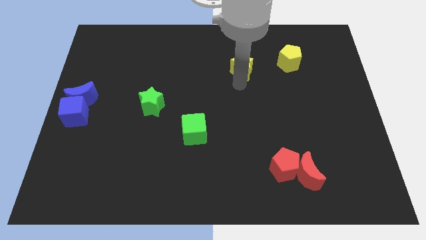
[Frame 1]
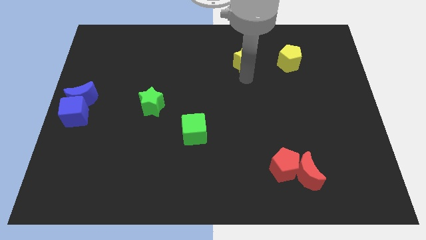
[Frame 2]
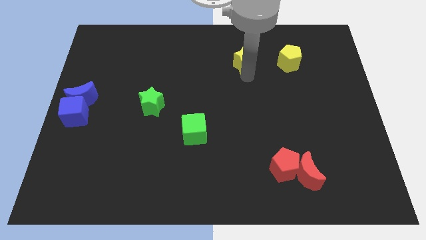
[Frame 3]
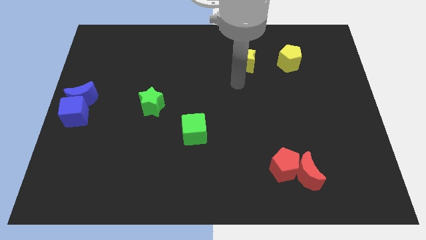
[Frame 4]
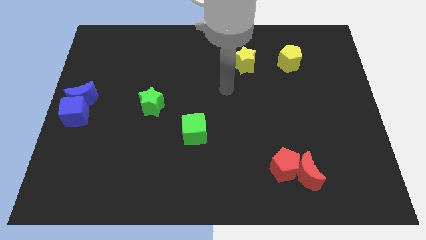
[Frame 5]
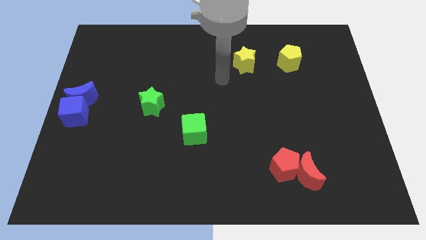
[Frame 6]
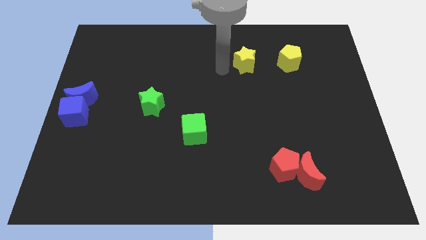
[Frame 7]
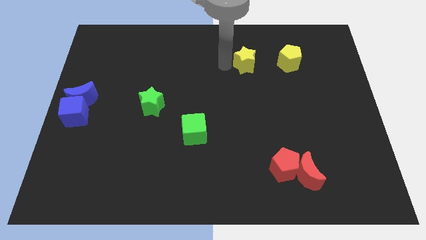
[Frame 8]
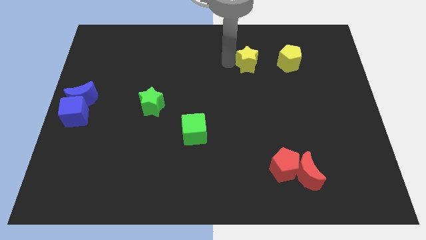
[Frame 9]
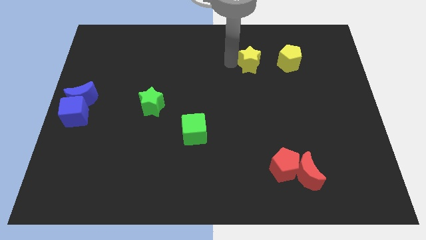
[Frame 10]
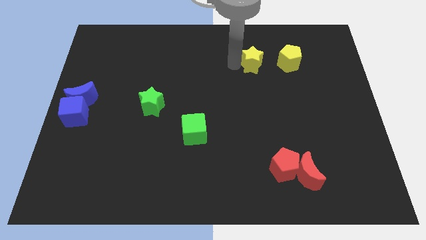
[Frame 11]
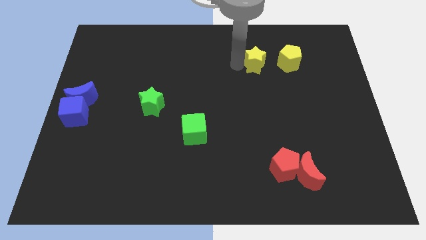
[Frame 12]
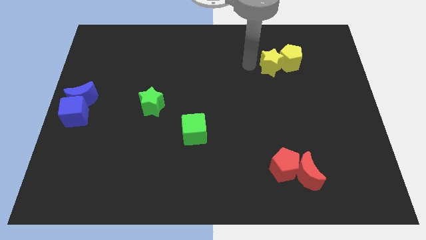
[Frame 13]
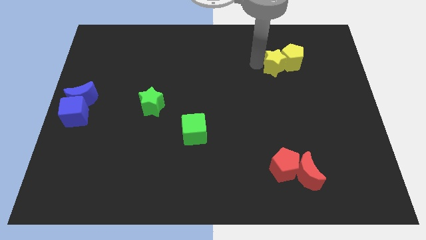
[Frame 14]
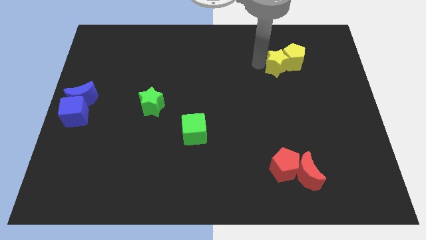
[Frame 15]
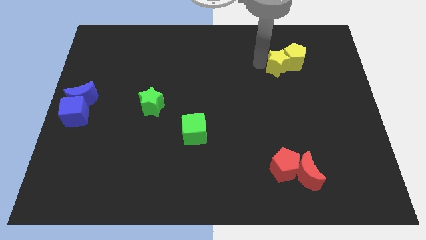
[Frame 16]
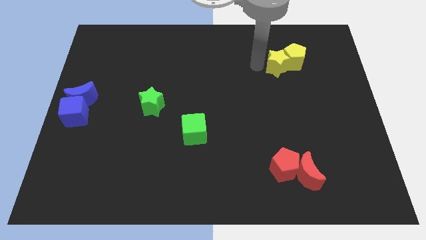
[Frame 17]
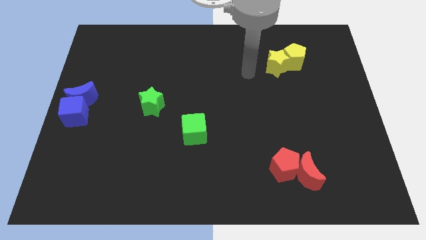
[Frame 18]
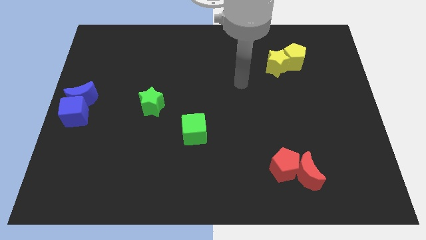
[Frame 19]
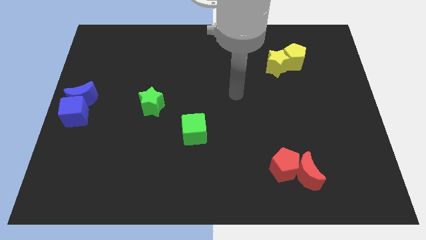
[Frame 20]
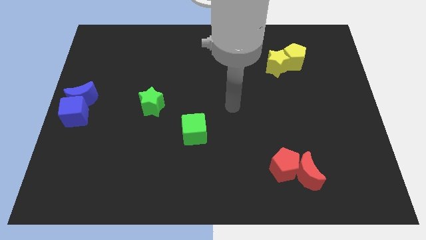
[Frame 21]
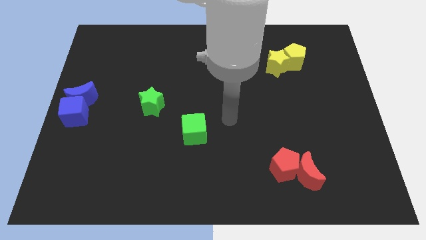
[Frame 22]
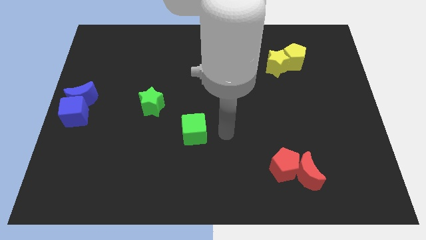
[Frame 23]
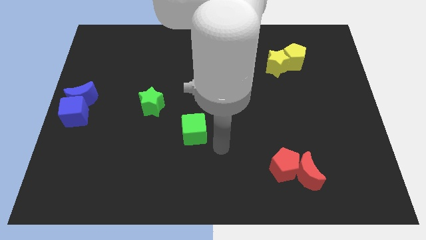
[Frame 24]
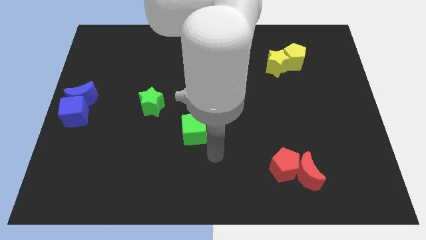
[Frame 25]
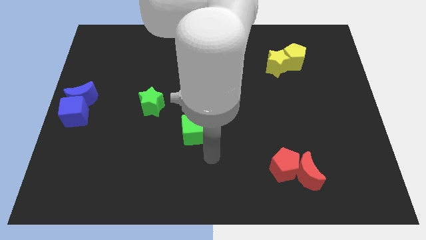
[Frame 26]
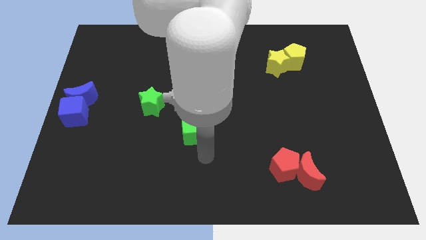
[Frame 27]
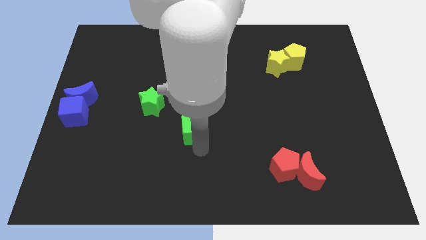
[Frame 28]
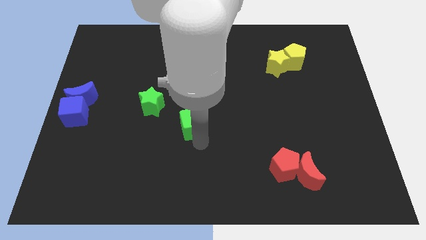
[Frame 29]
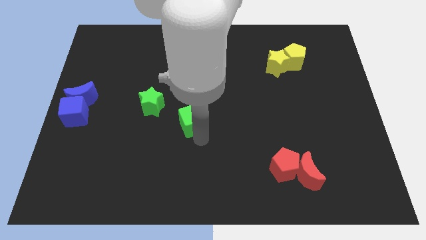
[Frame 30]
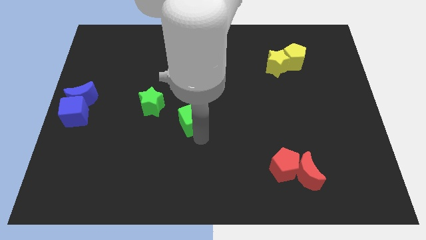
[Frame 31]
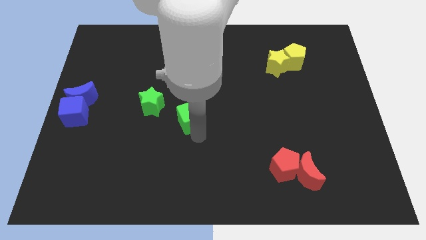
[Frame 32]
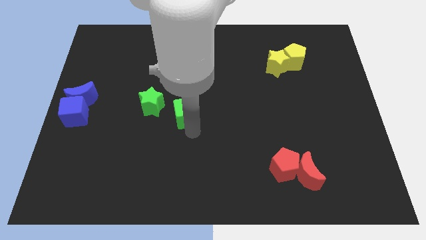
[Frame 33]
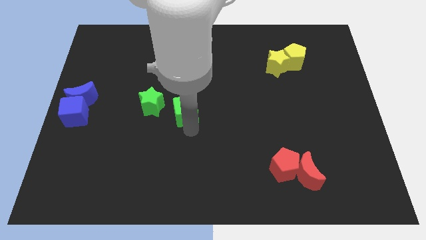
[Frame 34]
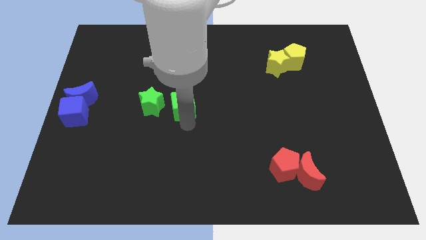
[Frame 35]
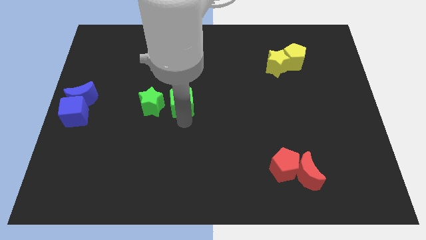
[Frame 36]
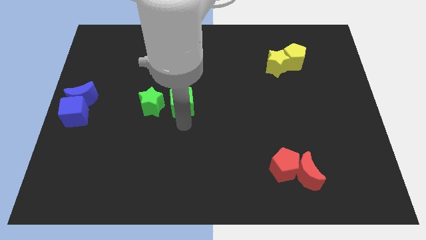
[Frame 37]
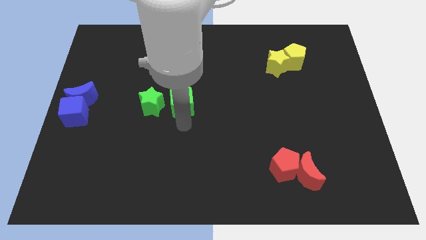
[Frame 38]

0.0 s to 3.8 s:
push the yellow star into yellow penatgon

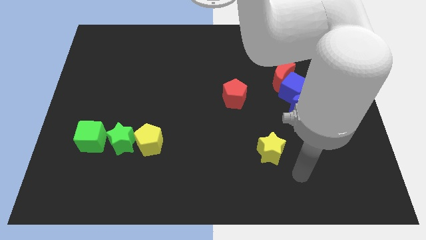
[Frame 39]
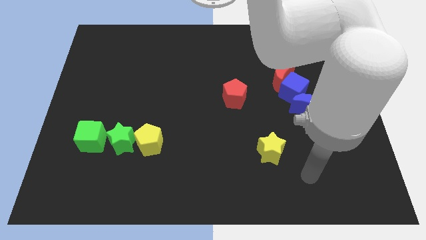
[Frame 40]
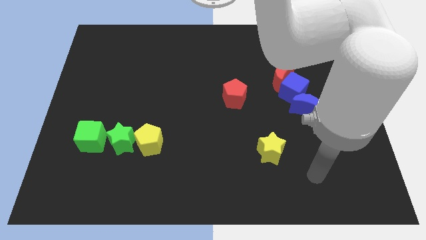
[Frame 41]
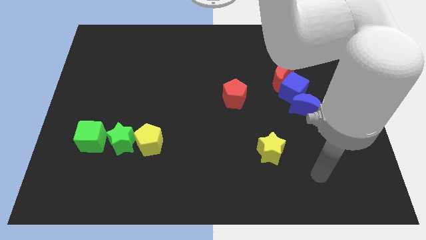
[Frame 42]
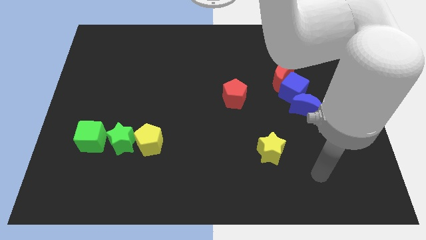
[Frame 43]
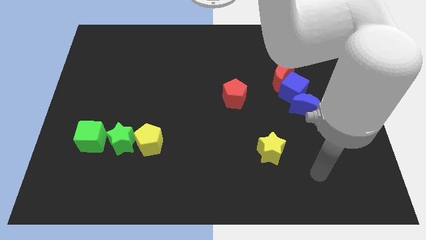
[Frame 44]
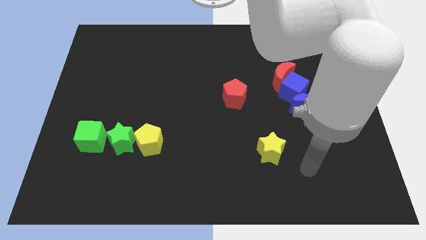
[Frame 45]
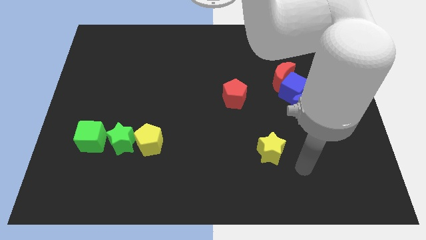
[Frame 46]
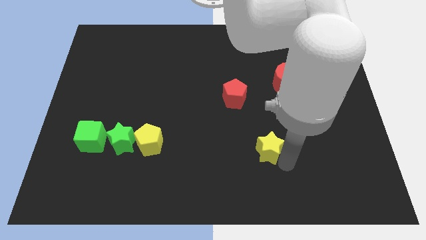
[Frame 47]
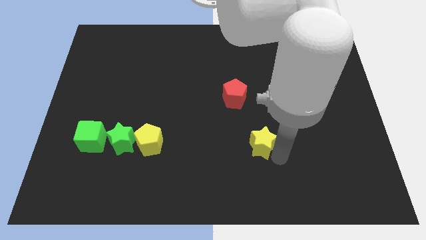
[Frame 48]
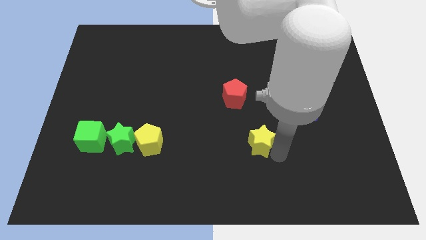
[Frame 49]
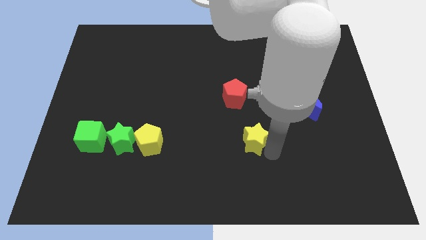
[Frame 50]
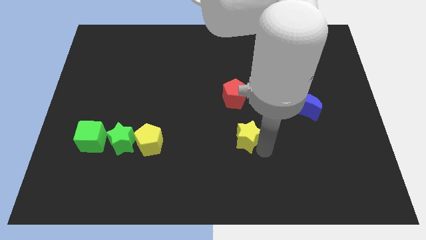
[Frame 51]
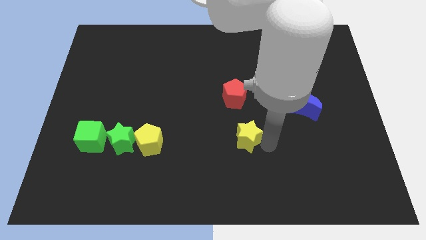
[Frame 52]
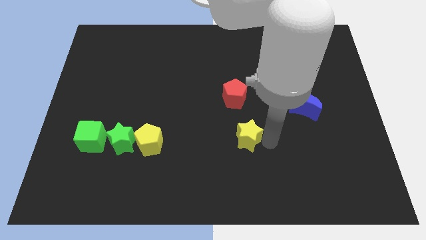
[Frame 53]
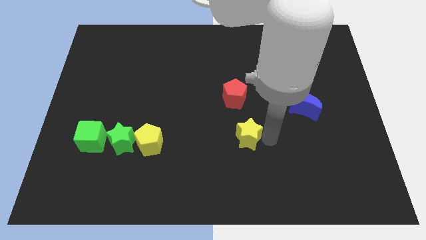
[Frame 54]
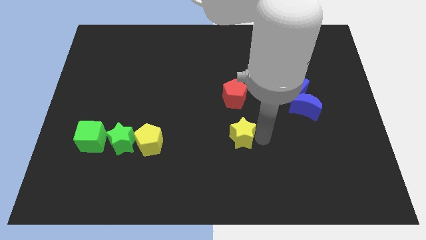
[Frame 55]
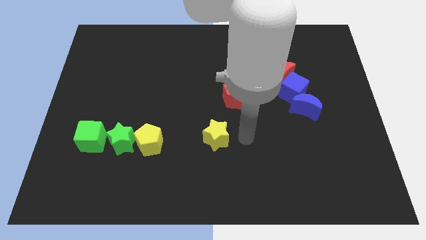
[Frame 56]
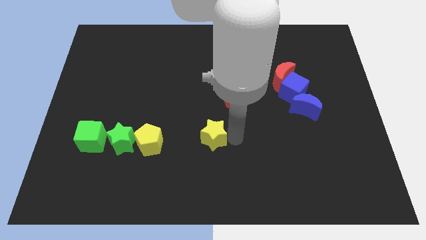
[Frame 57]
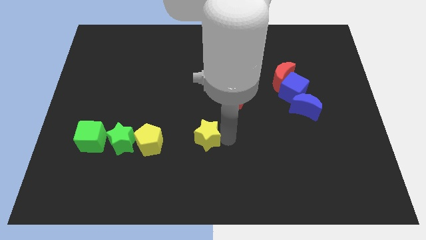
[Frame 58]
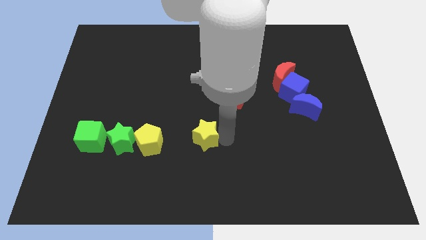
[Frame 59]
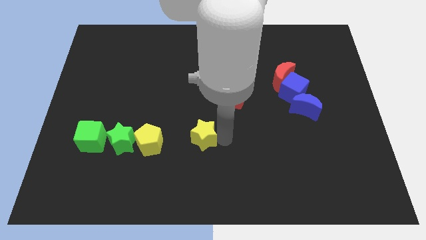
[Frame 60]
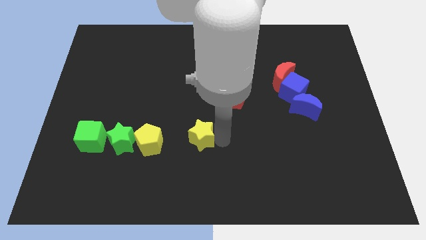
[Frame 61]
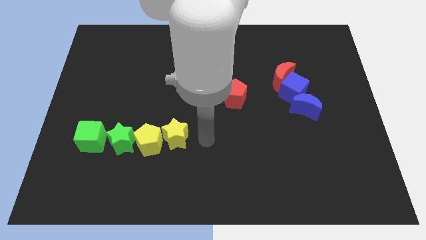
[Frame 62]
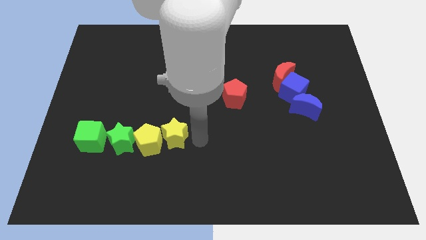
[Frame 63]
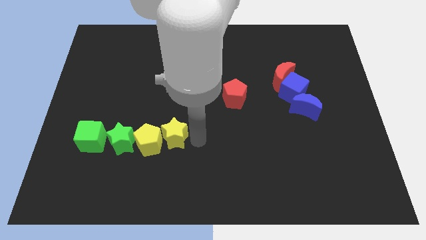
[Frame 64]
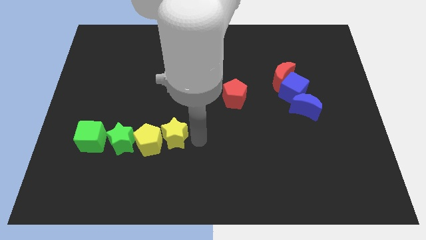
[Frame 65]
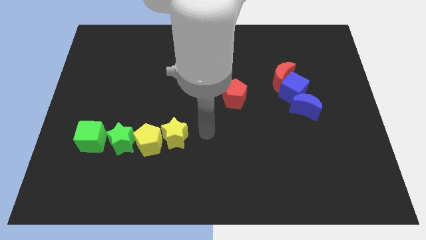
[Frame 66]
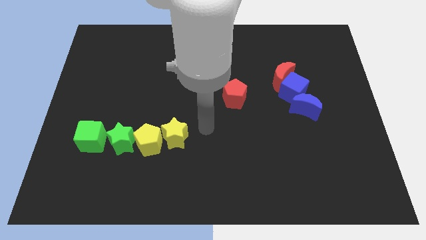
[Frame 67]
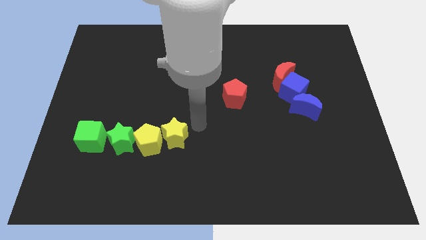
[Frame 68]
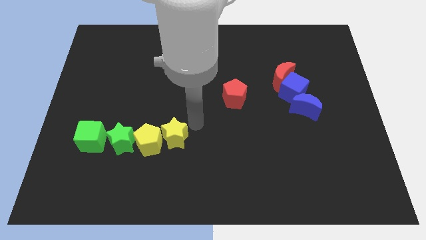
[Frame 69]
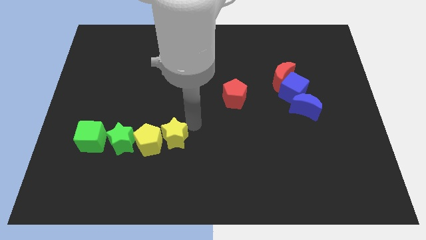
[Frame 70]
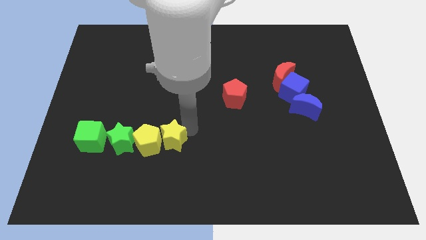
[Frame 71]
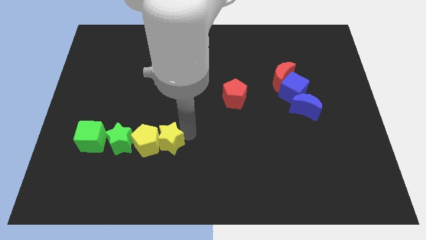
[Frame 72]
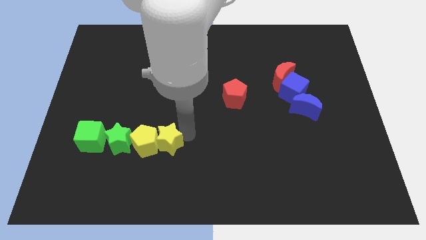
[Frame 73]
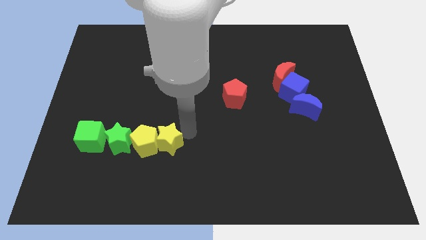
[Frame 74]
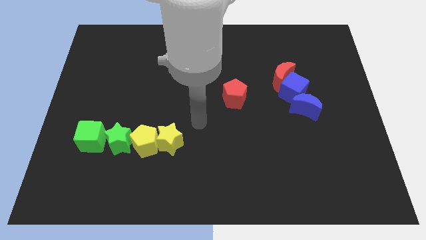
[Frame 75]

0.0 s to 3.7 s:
place the yellow star to the right of the yellow pentagon

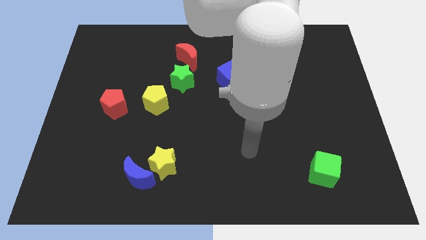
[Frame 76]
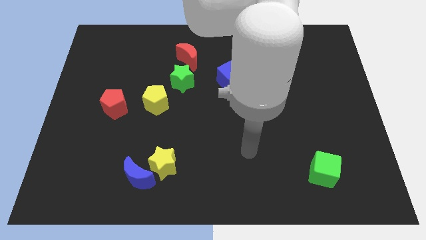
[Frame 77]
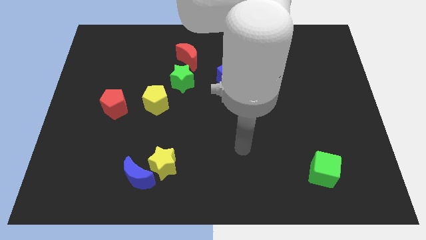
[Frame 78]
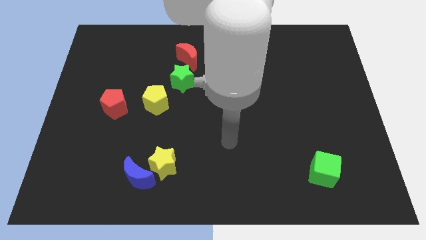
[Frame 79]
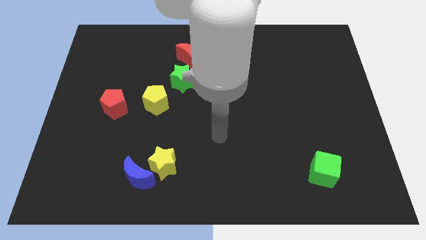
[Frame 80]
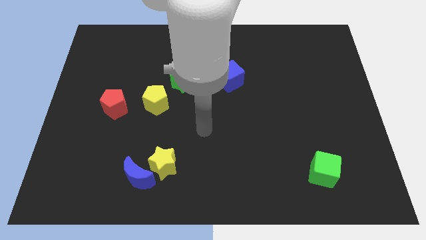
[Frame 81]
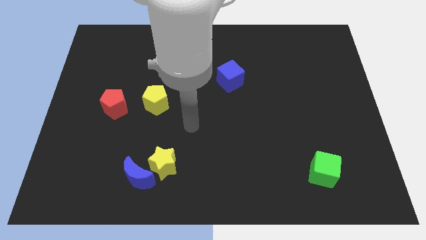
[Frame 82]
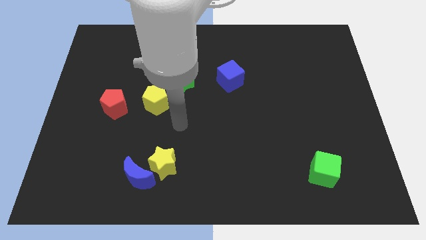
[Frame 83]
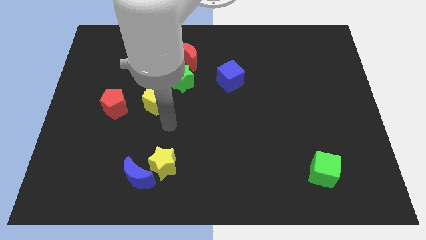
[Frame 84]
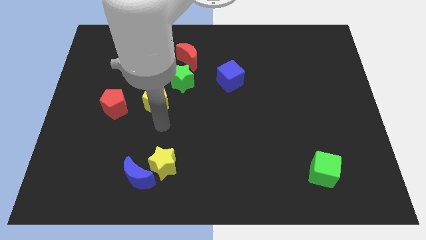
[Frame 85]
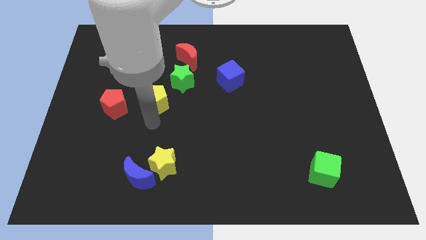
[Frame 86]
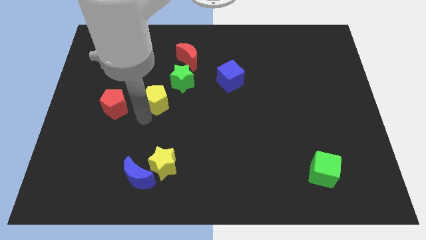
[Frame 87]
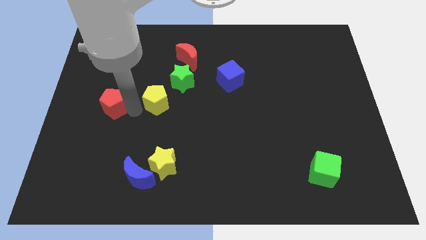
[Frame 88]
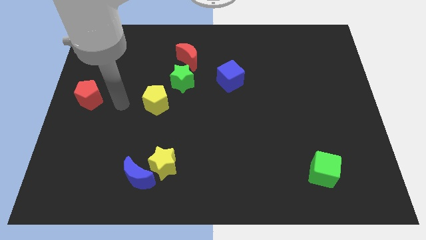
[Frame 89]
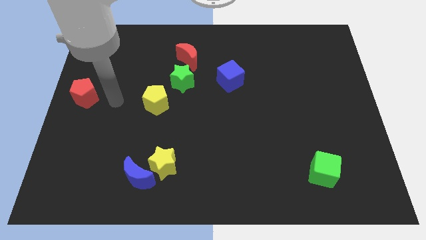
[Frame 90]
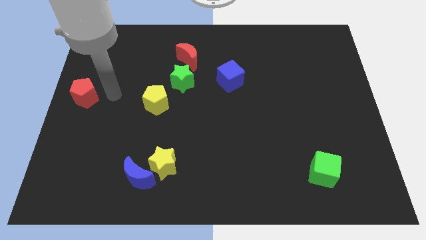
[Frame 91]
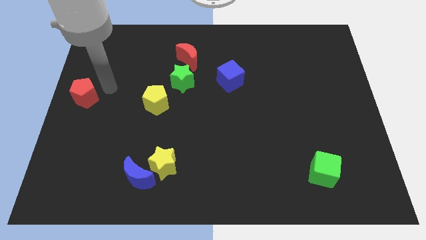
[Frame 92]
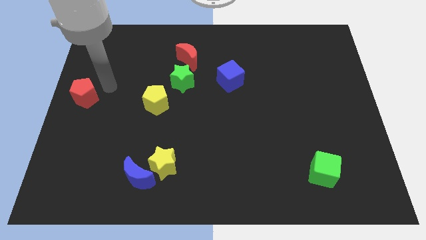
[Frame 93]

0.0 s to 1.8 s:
move the red pentagon towards the center left of the board
